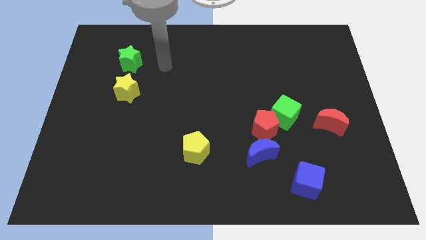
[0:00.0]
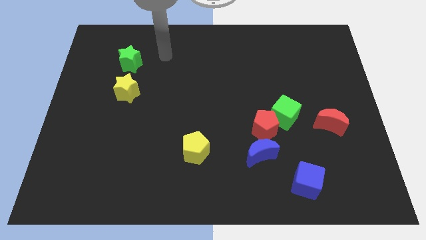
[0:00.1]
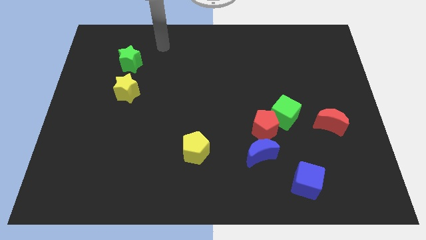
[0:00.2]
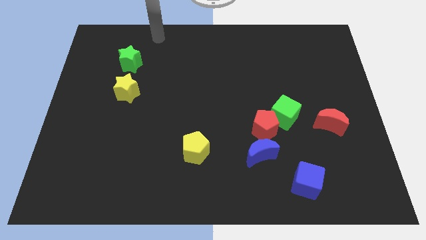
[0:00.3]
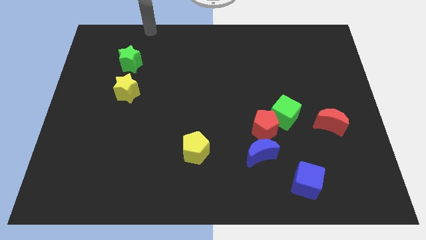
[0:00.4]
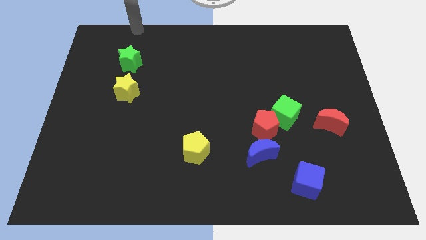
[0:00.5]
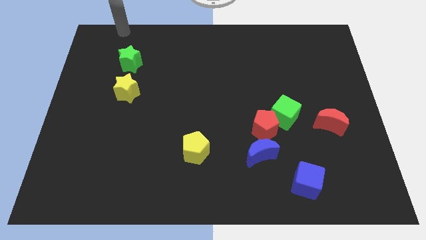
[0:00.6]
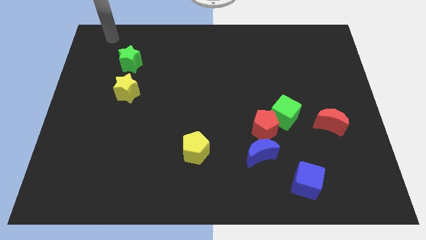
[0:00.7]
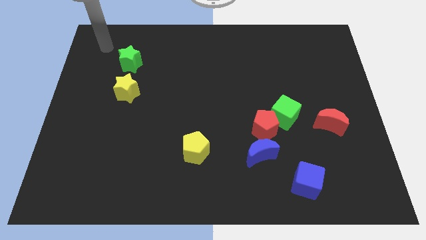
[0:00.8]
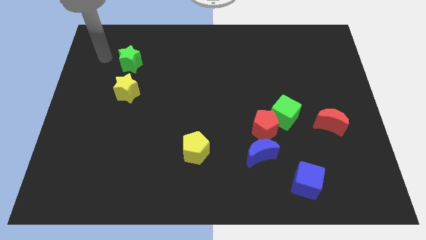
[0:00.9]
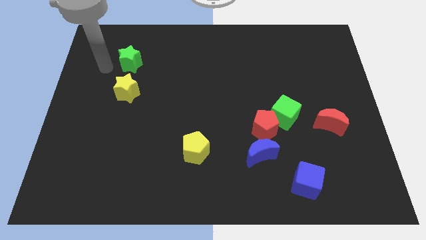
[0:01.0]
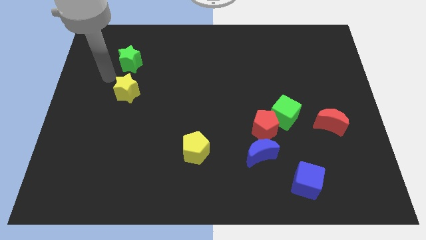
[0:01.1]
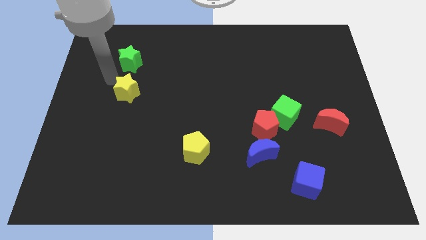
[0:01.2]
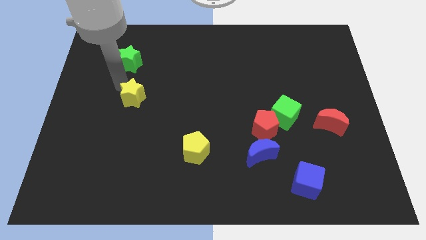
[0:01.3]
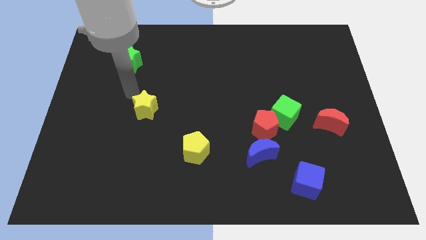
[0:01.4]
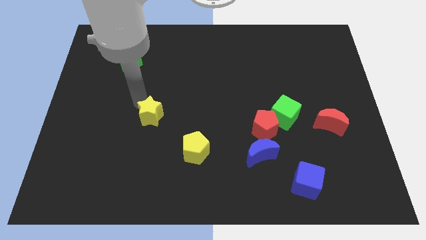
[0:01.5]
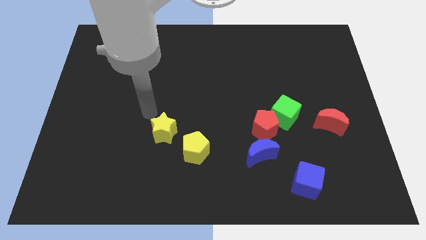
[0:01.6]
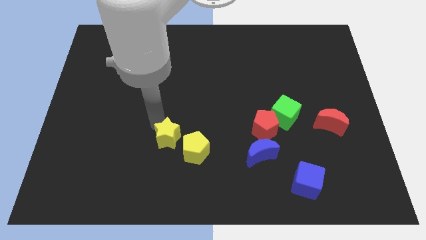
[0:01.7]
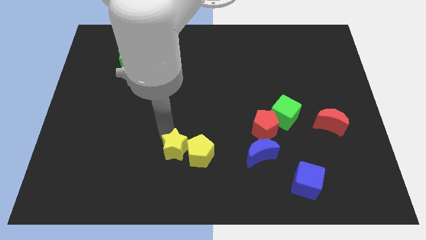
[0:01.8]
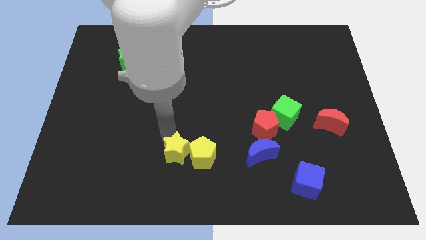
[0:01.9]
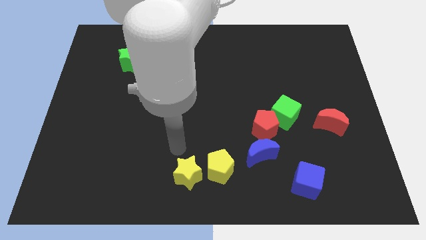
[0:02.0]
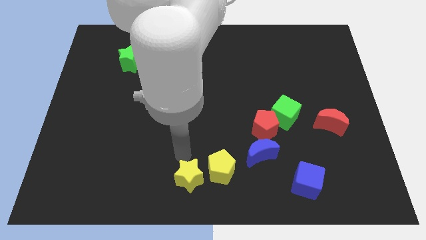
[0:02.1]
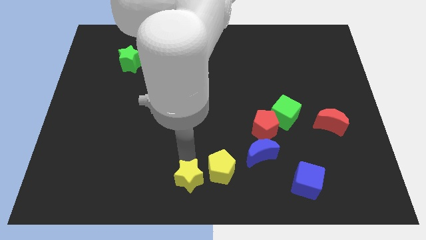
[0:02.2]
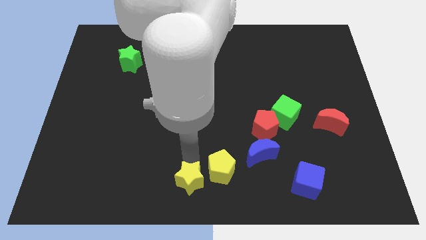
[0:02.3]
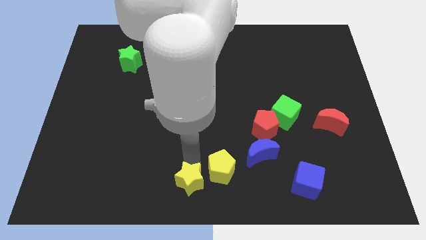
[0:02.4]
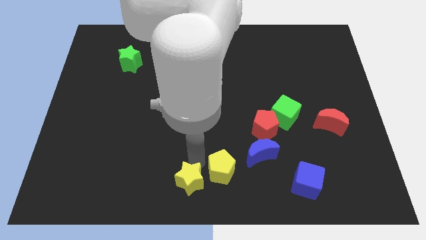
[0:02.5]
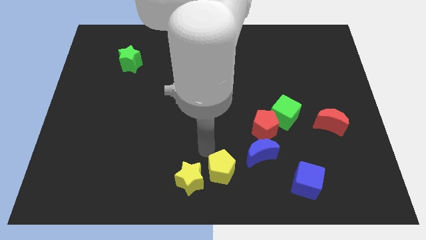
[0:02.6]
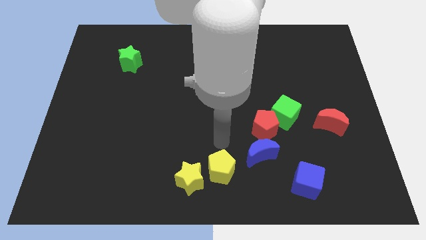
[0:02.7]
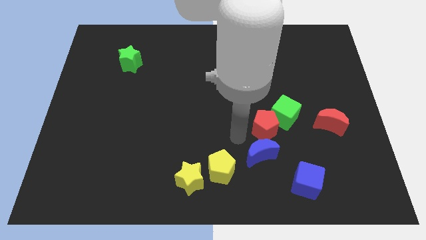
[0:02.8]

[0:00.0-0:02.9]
push the yellow star into the yellow pentagon

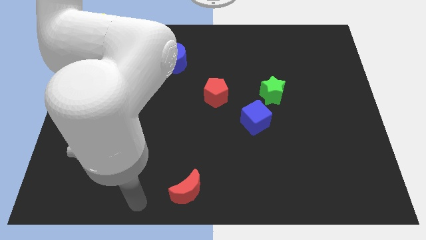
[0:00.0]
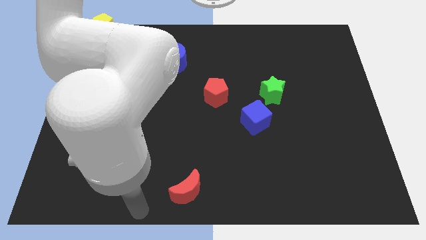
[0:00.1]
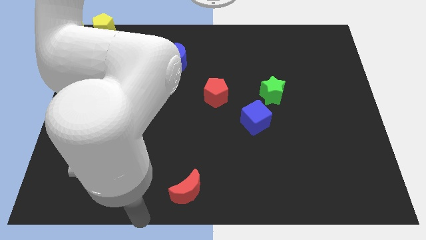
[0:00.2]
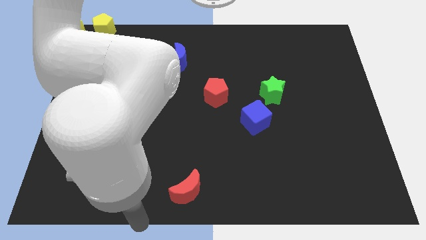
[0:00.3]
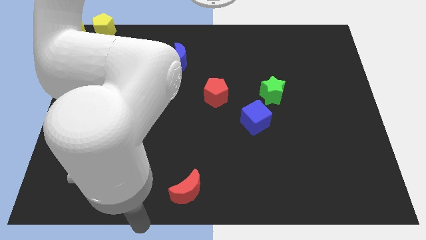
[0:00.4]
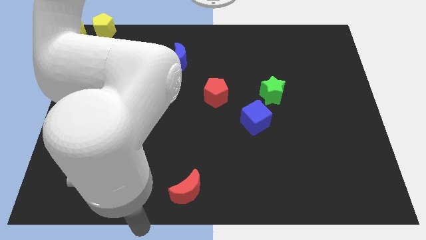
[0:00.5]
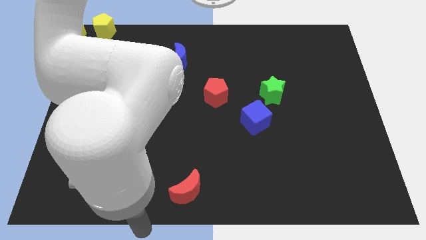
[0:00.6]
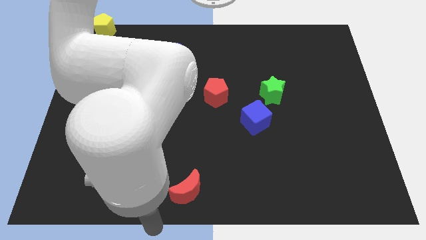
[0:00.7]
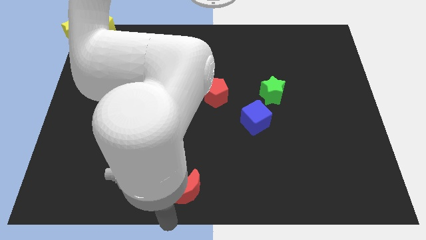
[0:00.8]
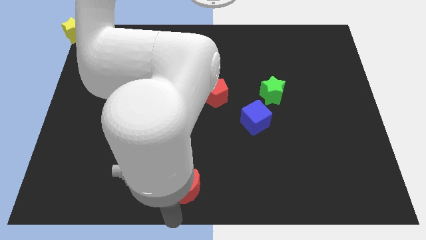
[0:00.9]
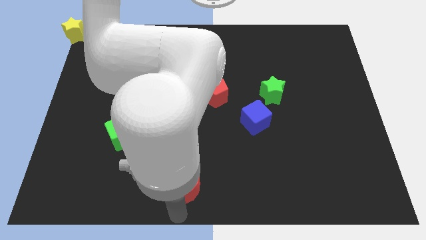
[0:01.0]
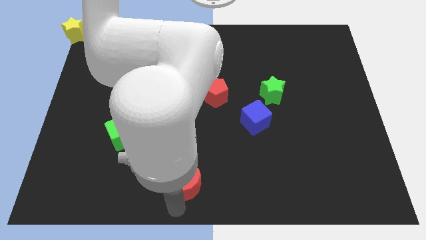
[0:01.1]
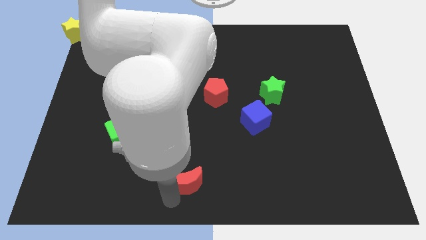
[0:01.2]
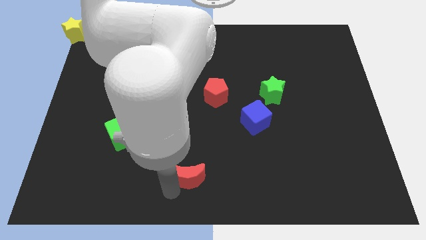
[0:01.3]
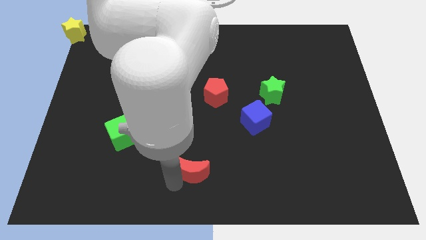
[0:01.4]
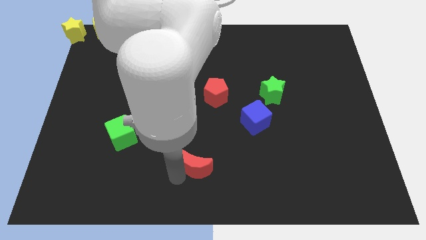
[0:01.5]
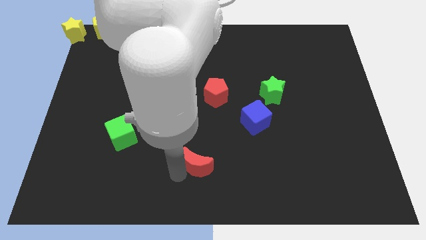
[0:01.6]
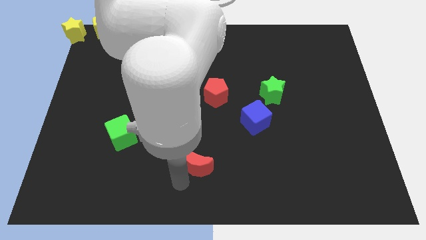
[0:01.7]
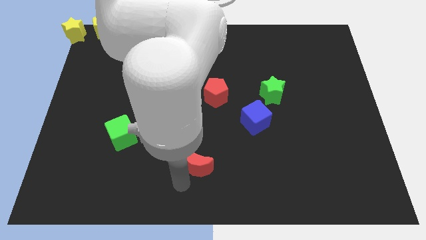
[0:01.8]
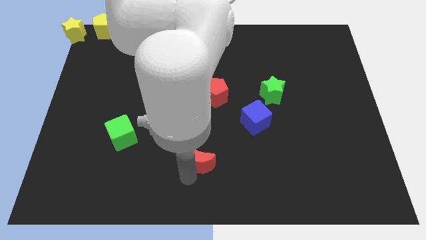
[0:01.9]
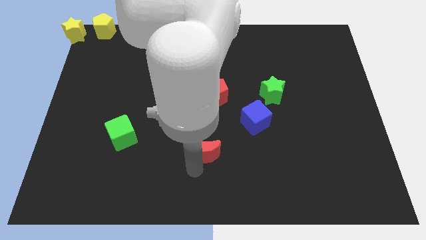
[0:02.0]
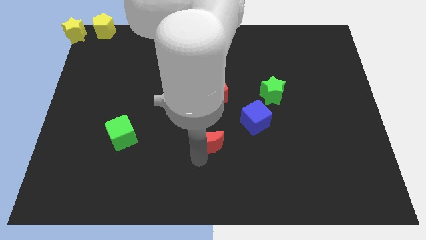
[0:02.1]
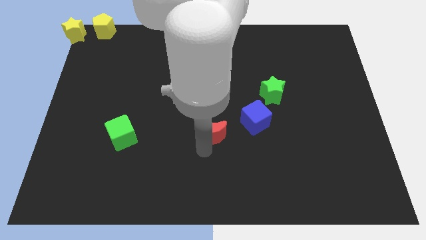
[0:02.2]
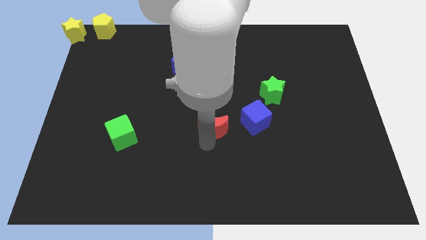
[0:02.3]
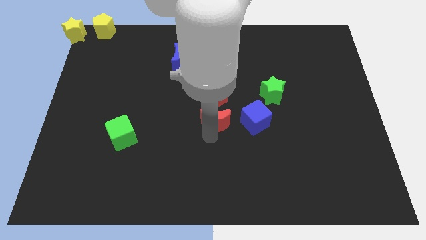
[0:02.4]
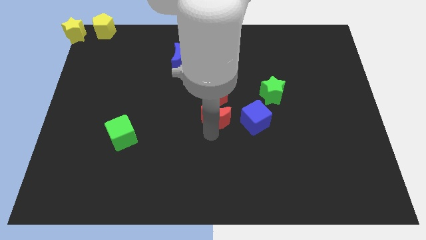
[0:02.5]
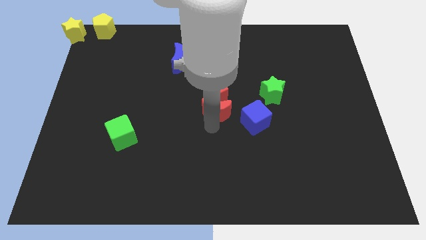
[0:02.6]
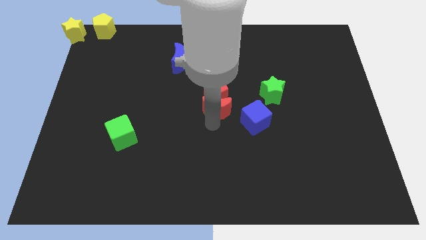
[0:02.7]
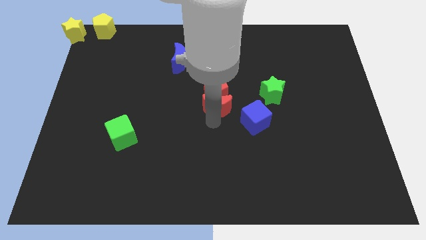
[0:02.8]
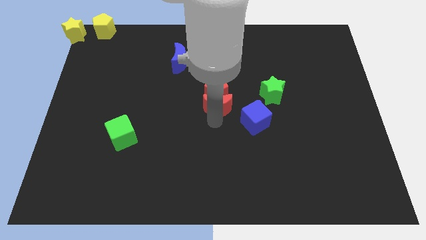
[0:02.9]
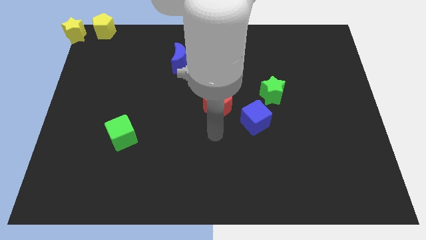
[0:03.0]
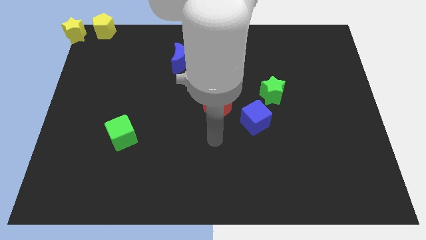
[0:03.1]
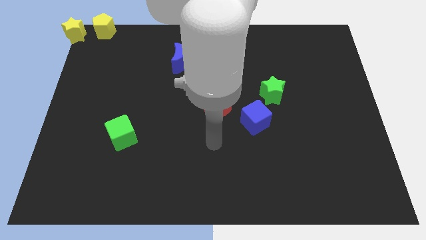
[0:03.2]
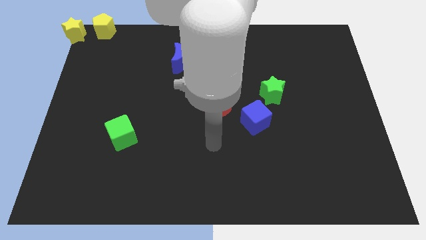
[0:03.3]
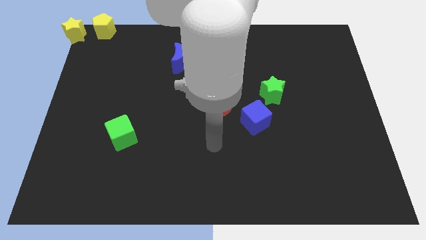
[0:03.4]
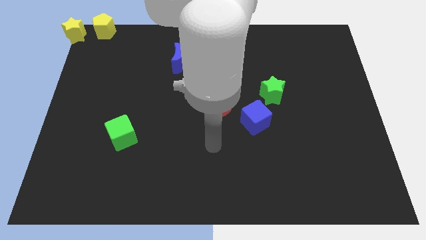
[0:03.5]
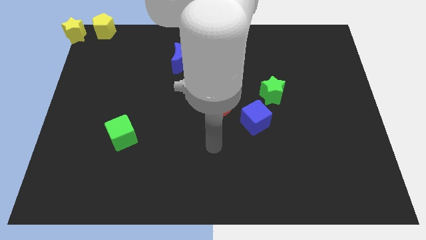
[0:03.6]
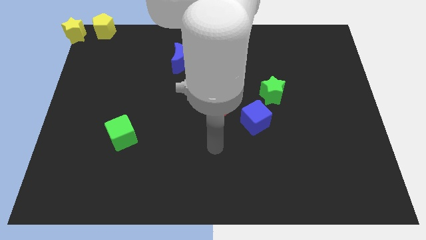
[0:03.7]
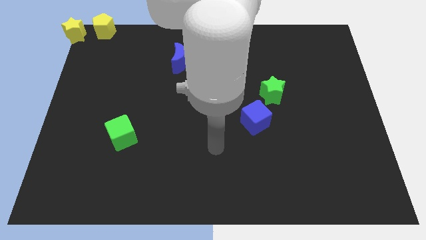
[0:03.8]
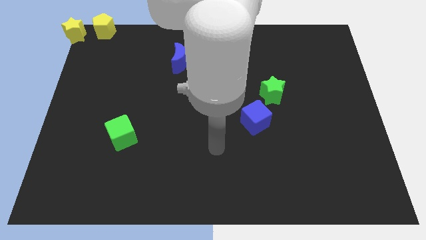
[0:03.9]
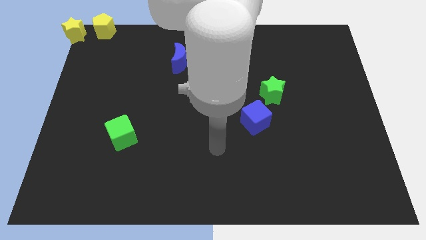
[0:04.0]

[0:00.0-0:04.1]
move red moon below the red pentagon

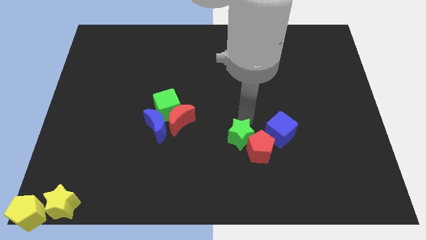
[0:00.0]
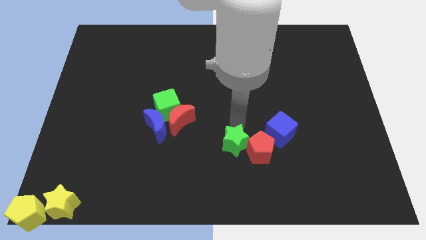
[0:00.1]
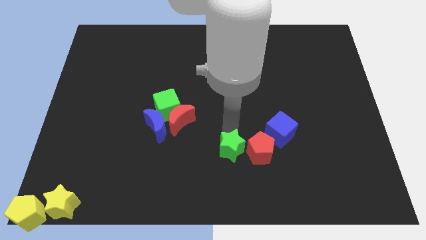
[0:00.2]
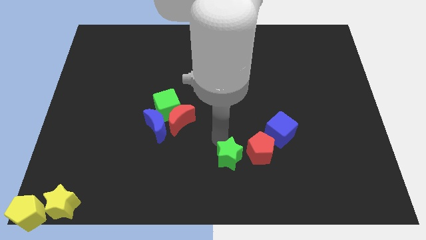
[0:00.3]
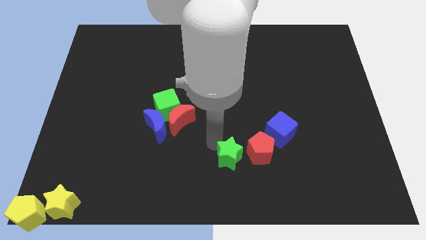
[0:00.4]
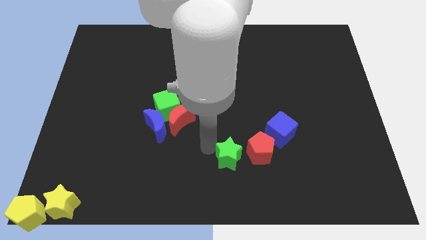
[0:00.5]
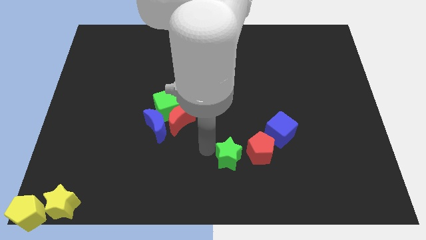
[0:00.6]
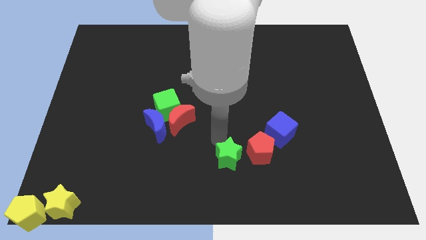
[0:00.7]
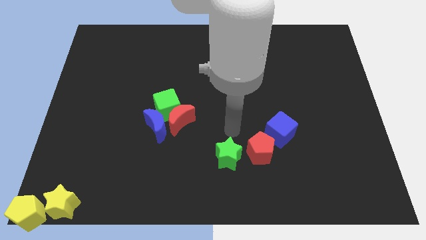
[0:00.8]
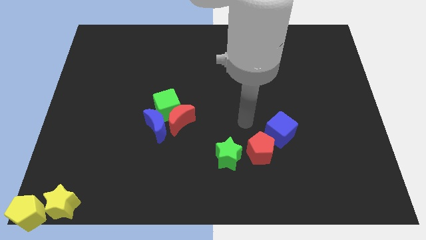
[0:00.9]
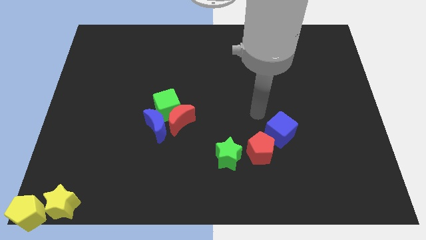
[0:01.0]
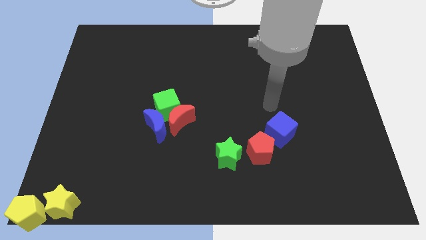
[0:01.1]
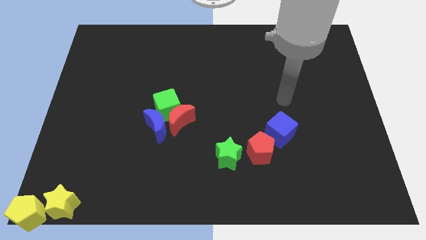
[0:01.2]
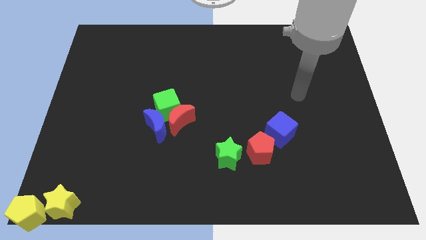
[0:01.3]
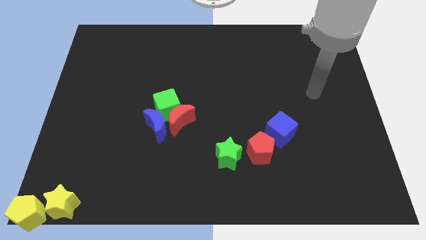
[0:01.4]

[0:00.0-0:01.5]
separate green star and the red pentagon

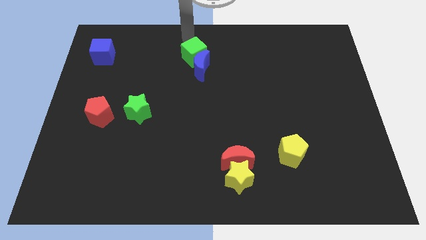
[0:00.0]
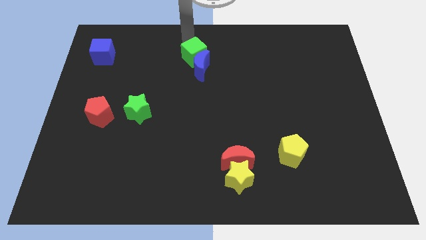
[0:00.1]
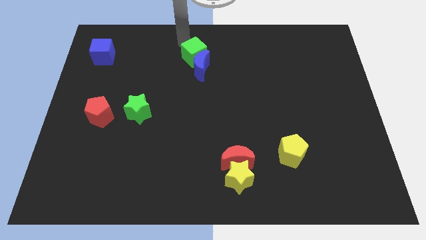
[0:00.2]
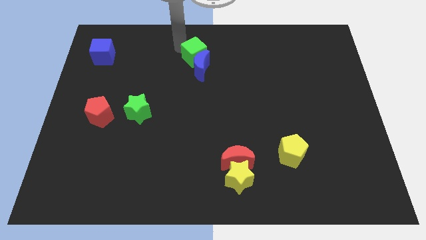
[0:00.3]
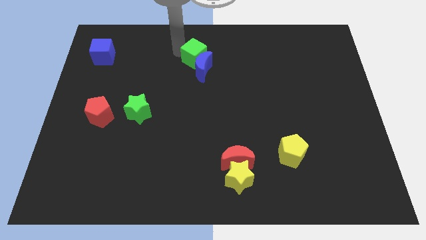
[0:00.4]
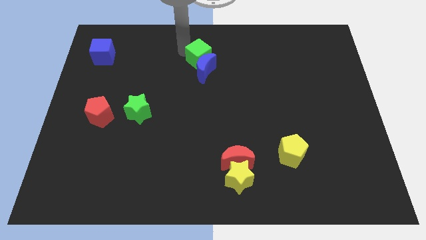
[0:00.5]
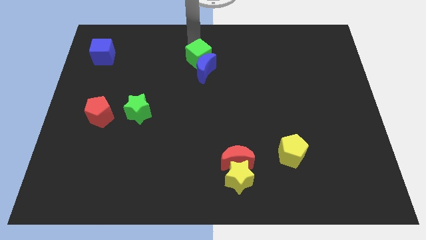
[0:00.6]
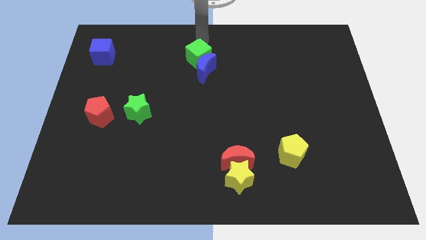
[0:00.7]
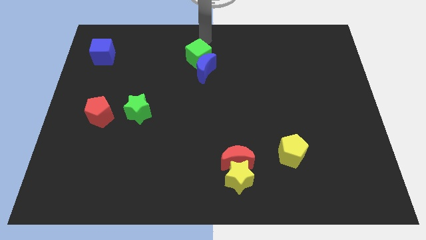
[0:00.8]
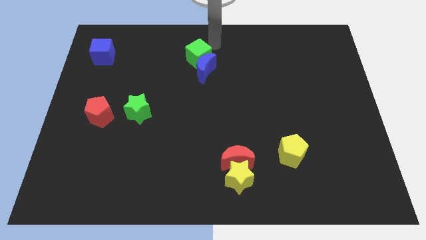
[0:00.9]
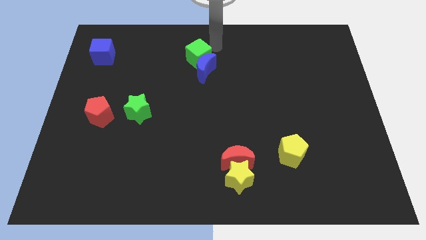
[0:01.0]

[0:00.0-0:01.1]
push the green cube into the blue moon slightly
